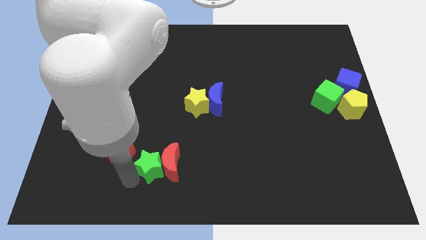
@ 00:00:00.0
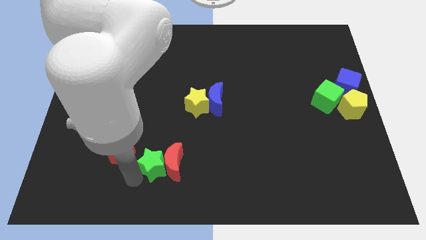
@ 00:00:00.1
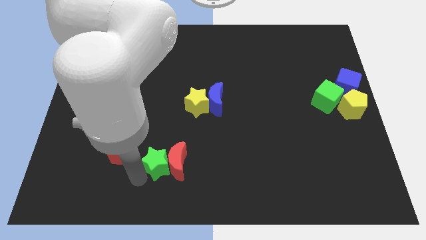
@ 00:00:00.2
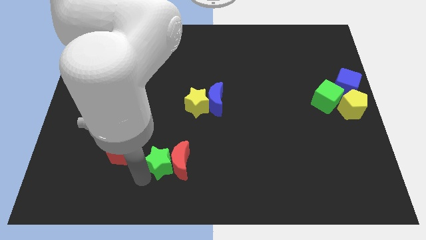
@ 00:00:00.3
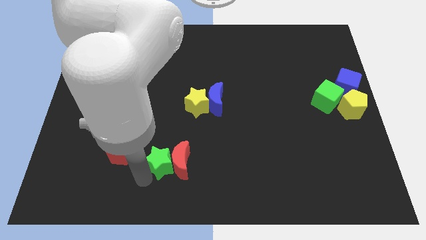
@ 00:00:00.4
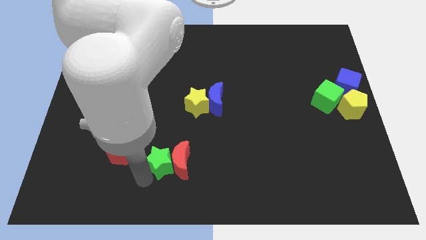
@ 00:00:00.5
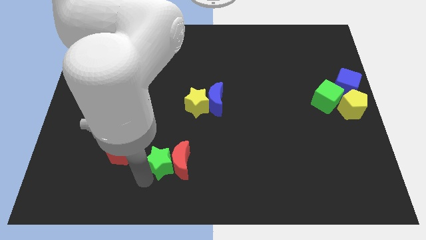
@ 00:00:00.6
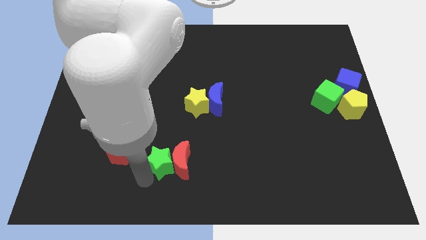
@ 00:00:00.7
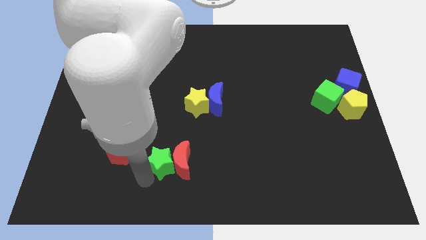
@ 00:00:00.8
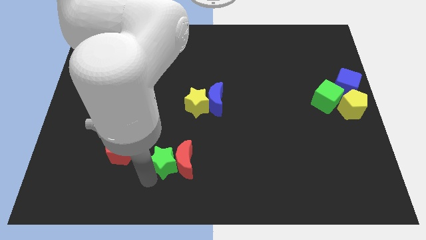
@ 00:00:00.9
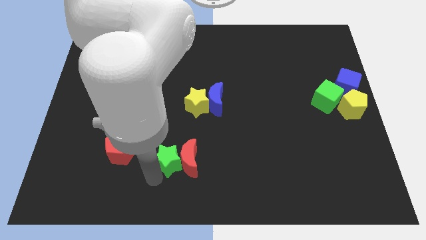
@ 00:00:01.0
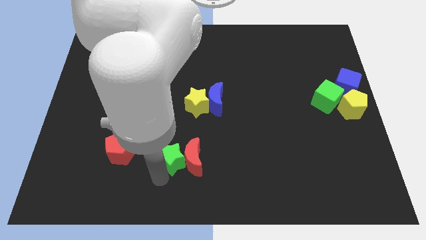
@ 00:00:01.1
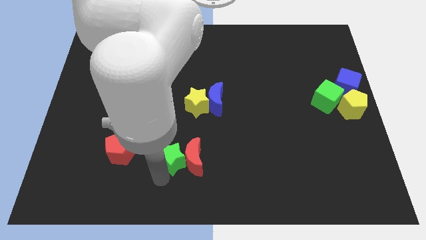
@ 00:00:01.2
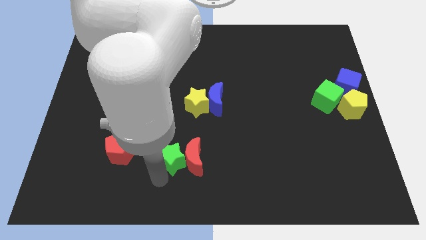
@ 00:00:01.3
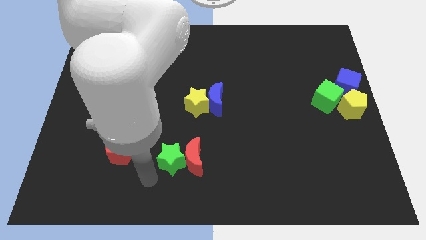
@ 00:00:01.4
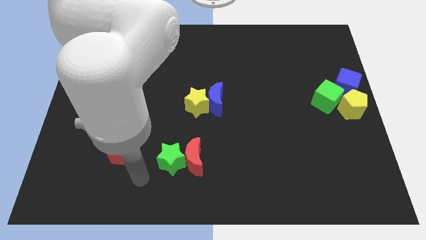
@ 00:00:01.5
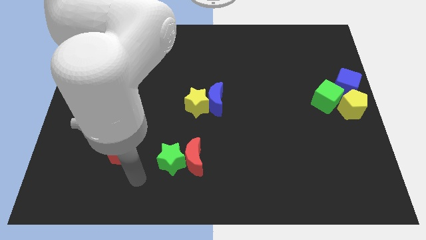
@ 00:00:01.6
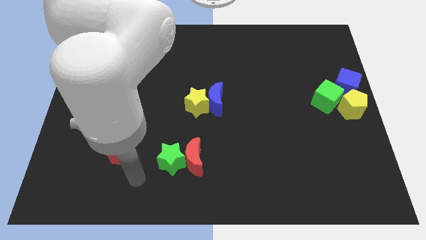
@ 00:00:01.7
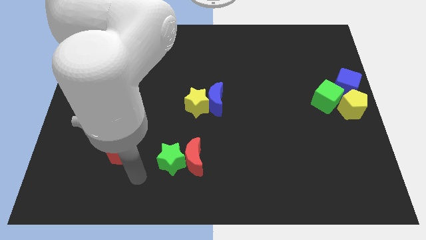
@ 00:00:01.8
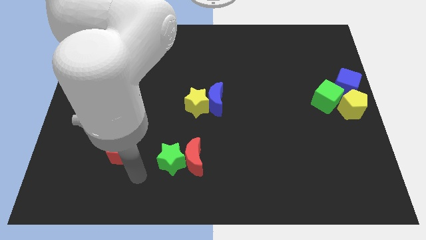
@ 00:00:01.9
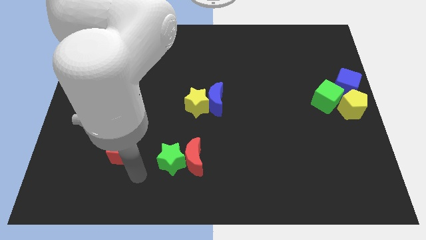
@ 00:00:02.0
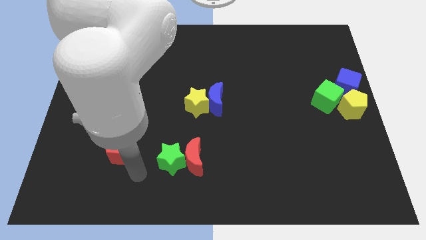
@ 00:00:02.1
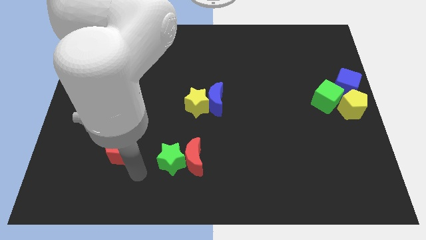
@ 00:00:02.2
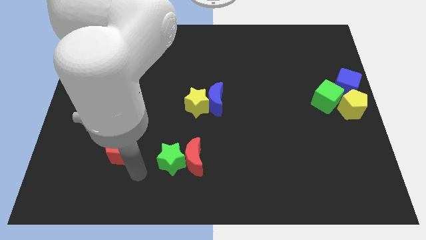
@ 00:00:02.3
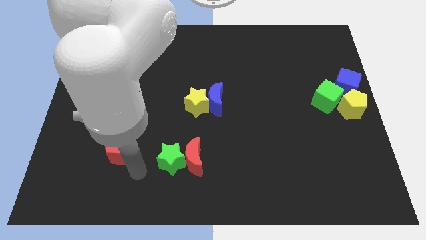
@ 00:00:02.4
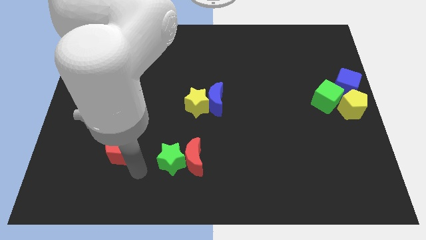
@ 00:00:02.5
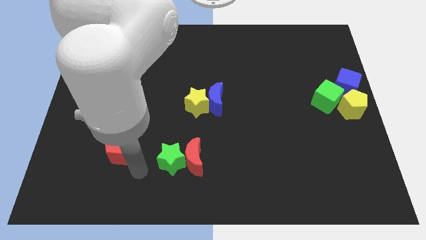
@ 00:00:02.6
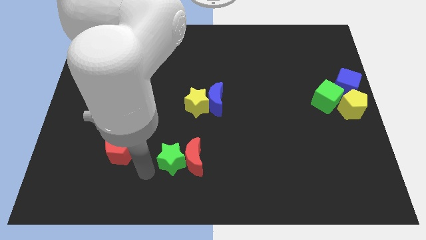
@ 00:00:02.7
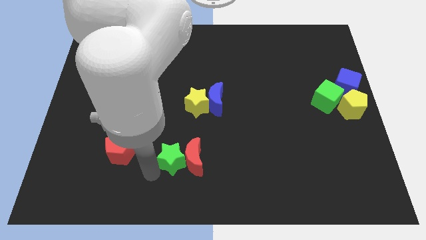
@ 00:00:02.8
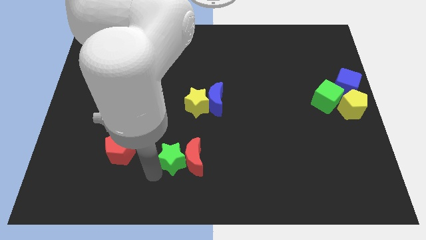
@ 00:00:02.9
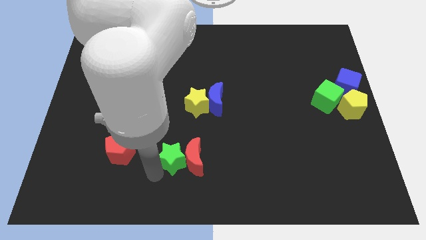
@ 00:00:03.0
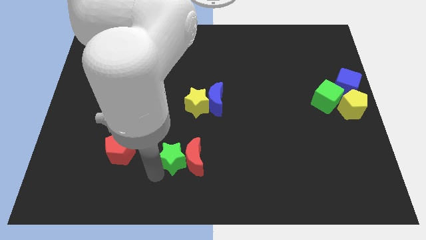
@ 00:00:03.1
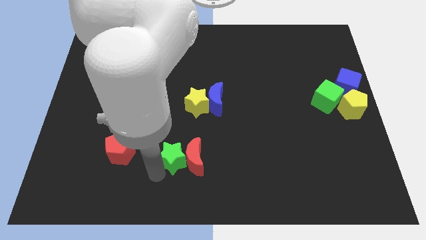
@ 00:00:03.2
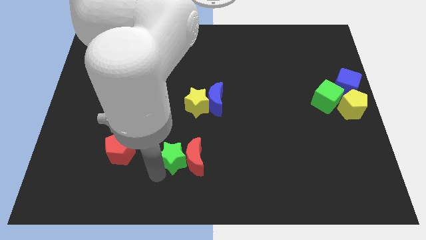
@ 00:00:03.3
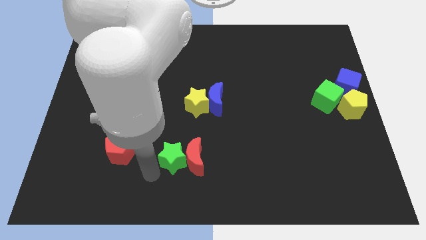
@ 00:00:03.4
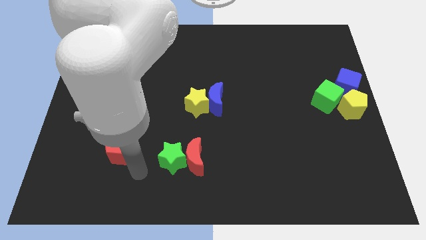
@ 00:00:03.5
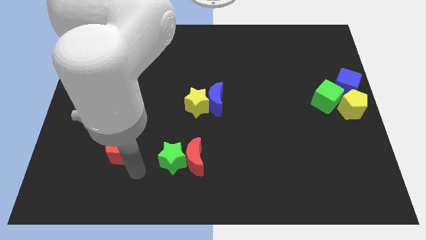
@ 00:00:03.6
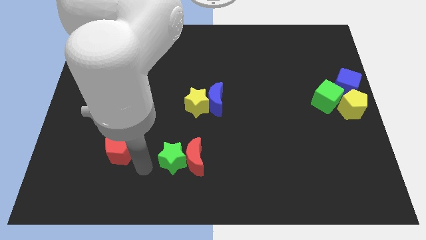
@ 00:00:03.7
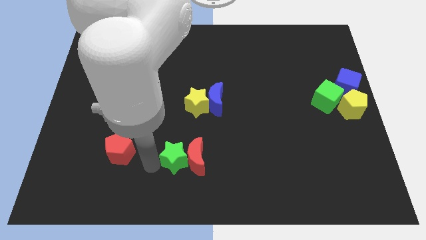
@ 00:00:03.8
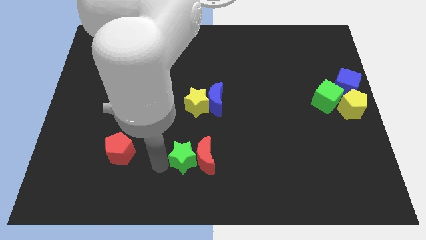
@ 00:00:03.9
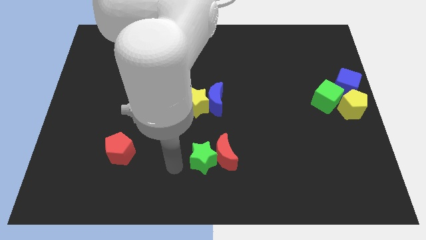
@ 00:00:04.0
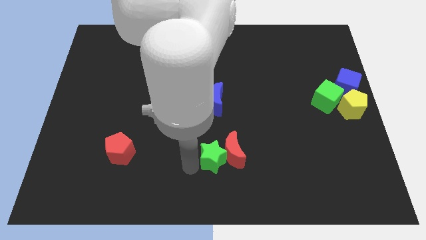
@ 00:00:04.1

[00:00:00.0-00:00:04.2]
move the green star and red crescent towards the bottom of yellow star and blue crescent

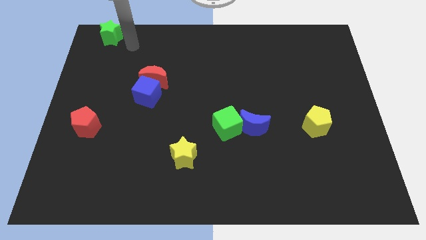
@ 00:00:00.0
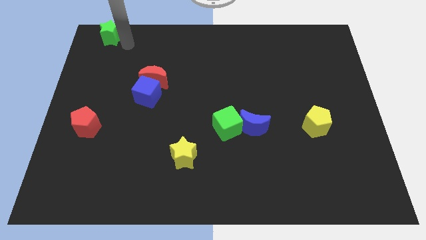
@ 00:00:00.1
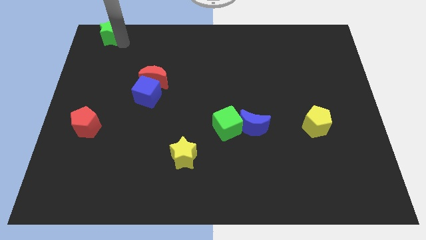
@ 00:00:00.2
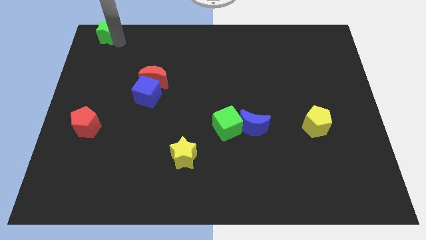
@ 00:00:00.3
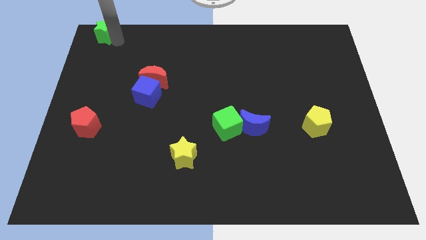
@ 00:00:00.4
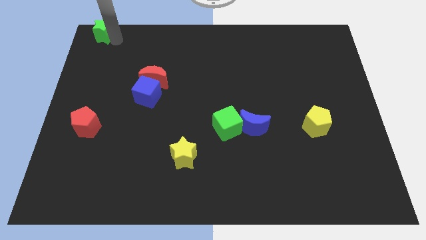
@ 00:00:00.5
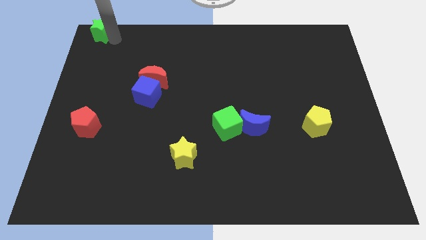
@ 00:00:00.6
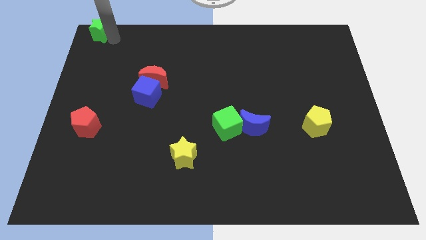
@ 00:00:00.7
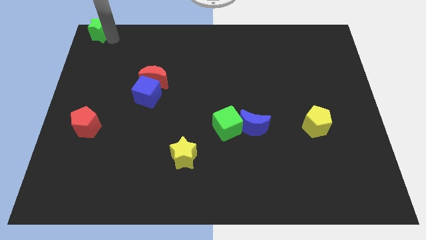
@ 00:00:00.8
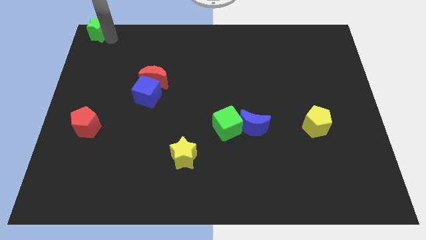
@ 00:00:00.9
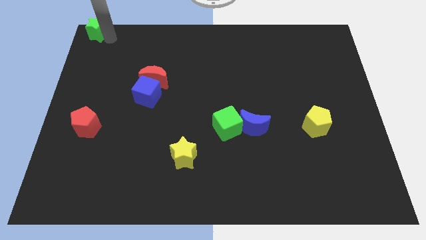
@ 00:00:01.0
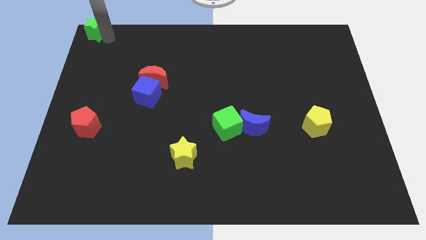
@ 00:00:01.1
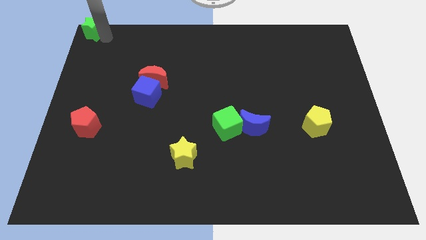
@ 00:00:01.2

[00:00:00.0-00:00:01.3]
place green star at the top left corner of the board

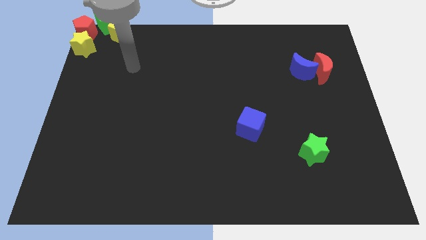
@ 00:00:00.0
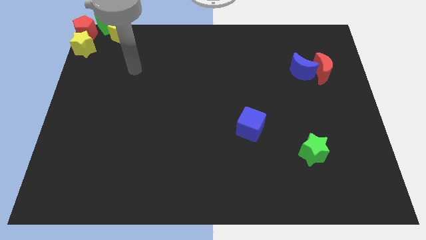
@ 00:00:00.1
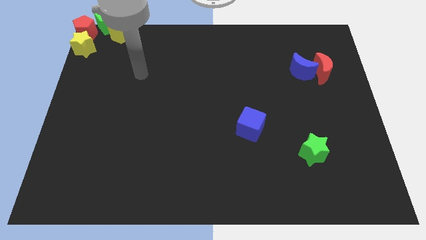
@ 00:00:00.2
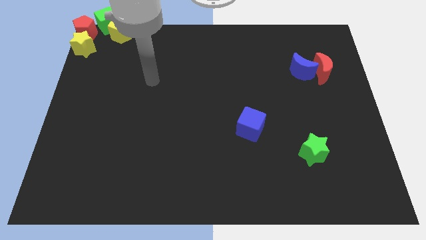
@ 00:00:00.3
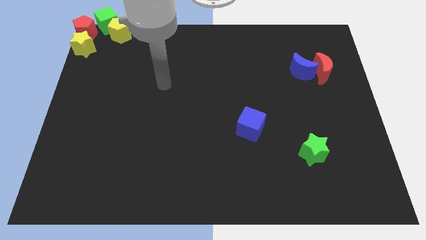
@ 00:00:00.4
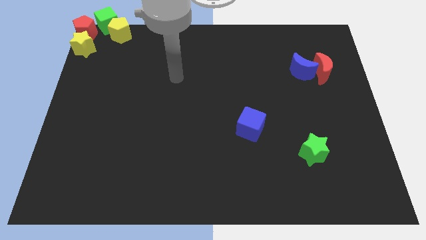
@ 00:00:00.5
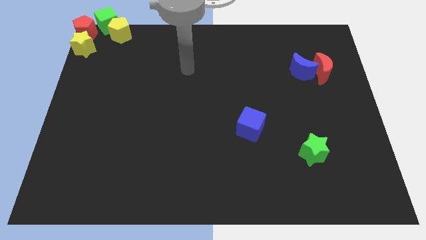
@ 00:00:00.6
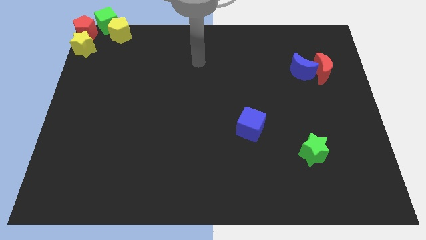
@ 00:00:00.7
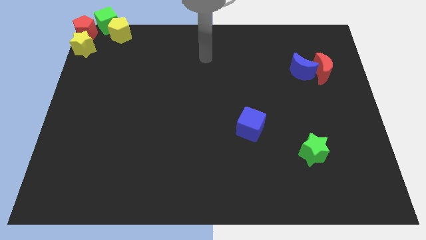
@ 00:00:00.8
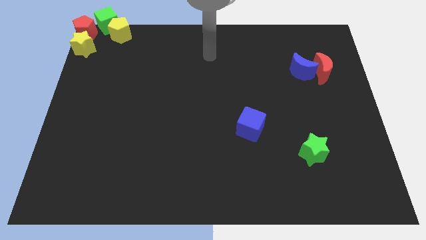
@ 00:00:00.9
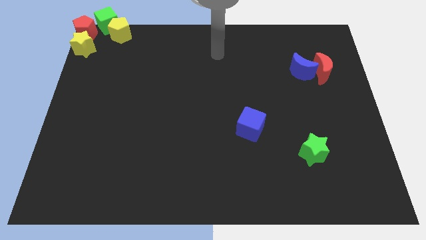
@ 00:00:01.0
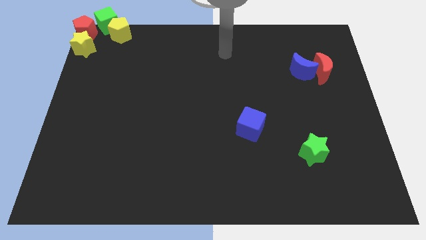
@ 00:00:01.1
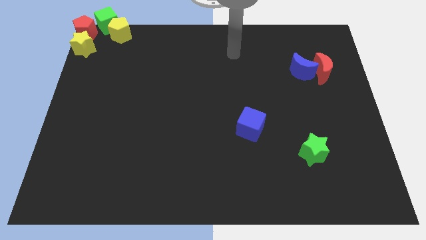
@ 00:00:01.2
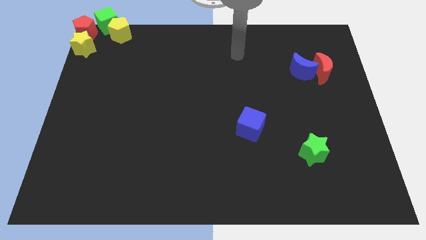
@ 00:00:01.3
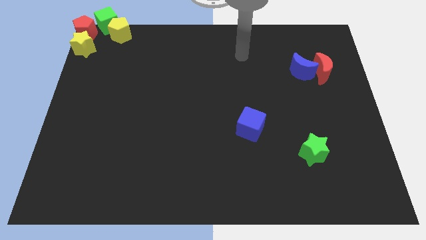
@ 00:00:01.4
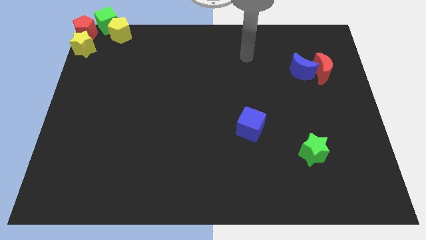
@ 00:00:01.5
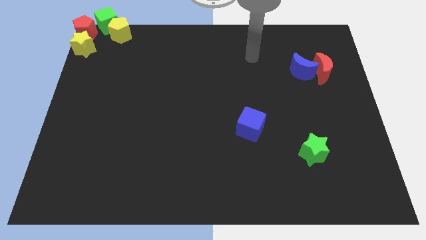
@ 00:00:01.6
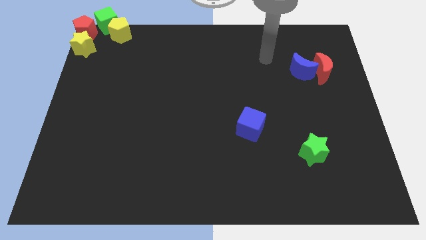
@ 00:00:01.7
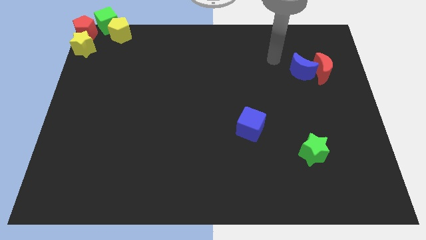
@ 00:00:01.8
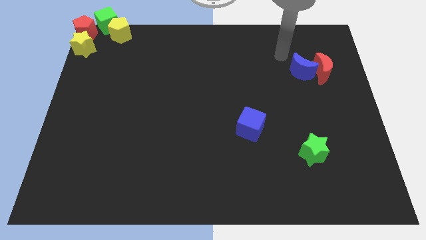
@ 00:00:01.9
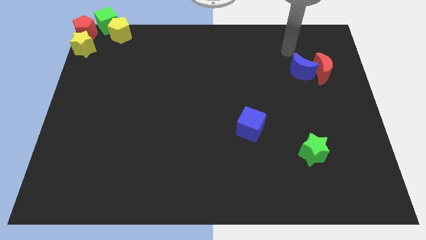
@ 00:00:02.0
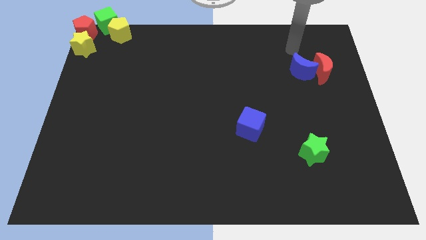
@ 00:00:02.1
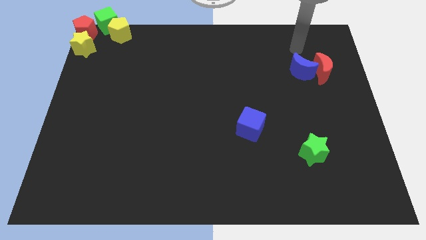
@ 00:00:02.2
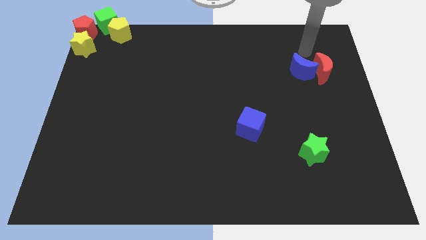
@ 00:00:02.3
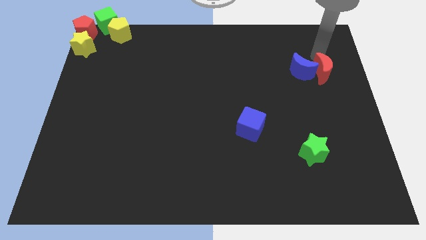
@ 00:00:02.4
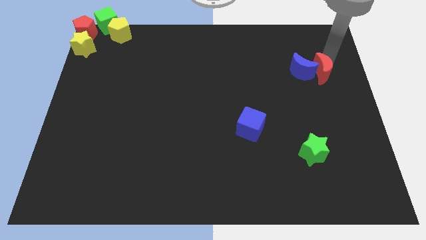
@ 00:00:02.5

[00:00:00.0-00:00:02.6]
move your arm near red moon

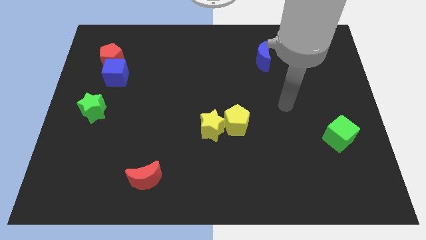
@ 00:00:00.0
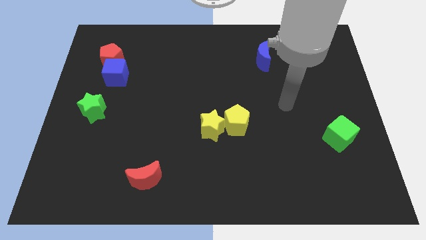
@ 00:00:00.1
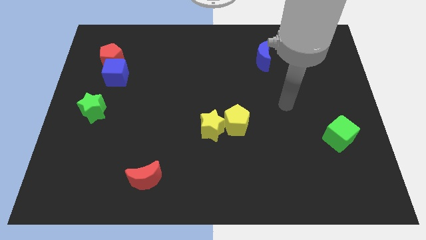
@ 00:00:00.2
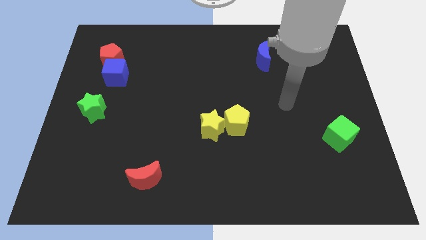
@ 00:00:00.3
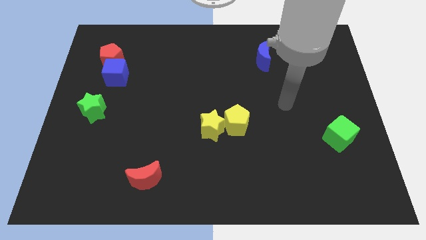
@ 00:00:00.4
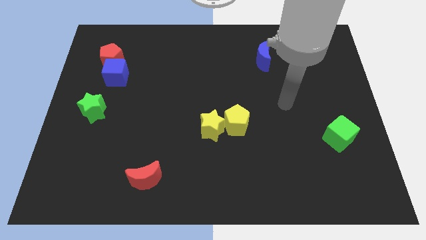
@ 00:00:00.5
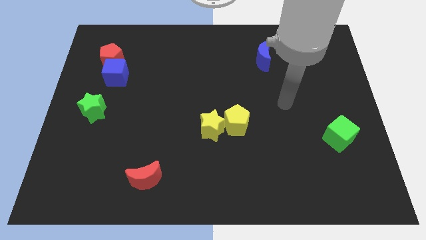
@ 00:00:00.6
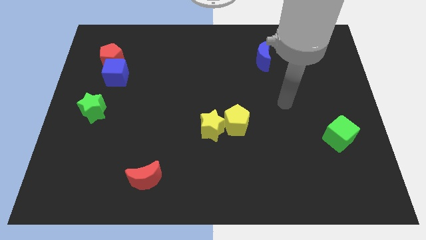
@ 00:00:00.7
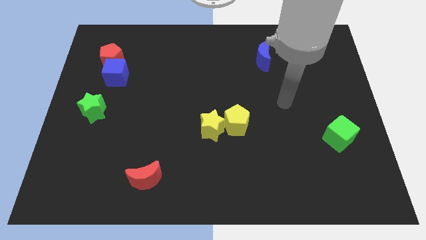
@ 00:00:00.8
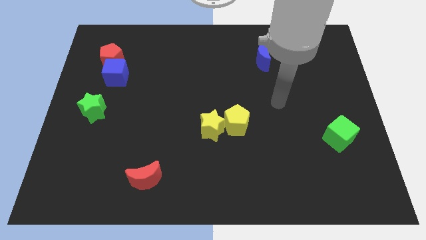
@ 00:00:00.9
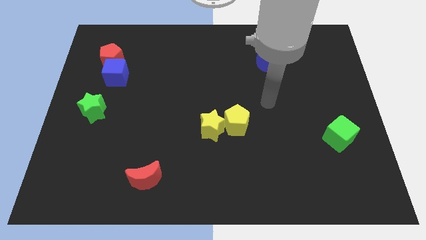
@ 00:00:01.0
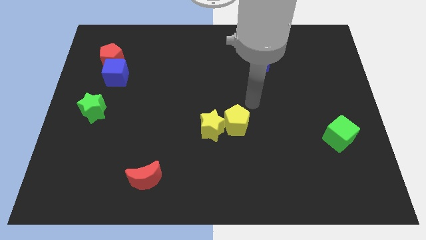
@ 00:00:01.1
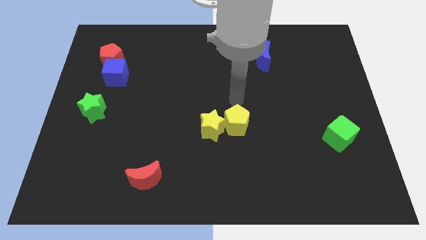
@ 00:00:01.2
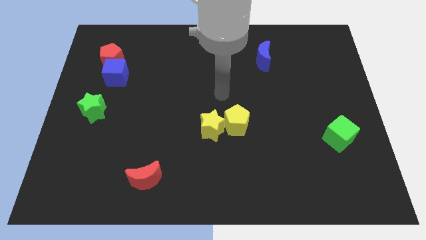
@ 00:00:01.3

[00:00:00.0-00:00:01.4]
point the arm at the center of the board
